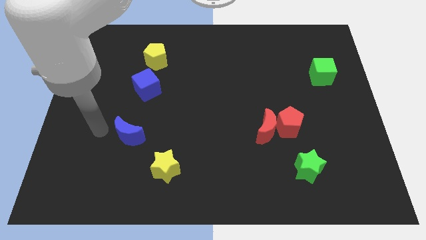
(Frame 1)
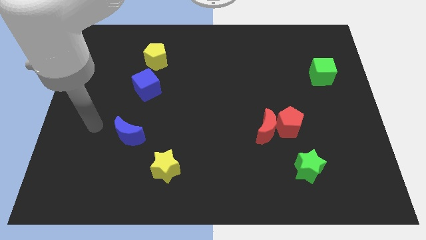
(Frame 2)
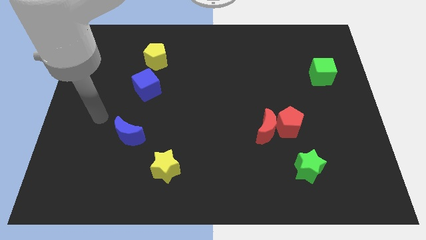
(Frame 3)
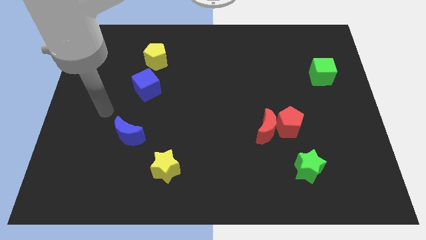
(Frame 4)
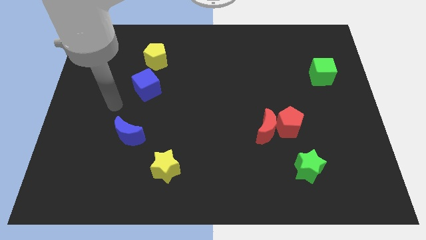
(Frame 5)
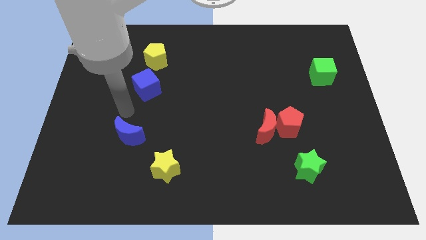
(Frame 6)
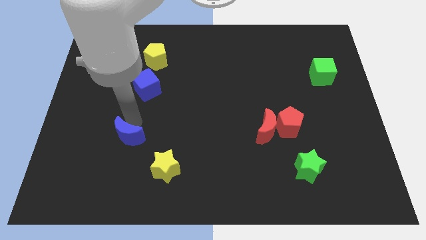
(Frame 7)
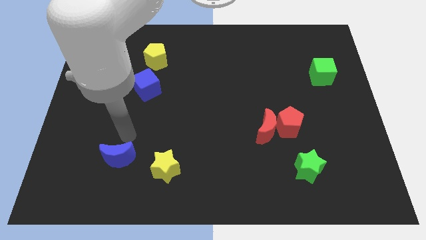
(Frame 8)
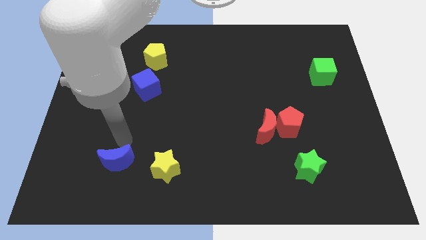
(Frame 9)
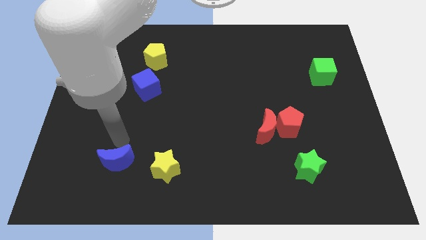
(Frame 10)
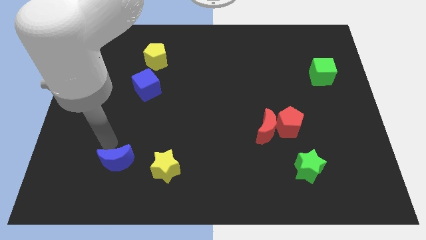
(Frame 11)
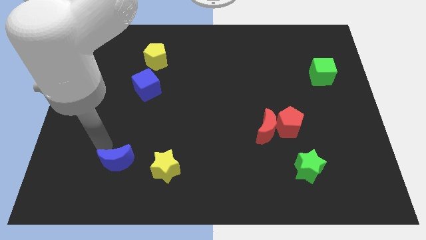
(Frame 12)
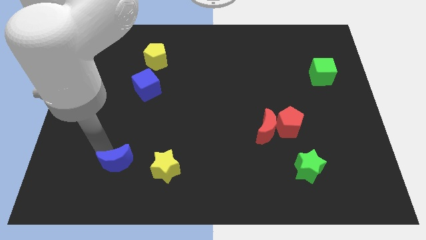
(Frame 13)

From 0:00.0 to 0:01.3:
place the blue moon left to the yellow star

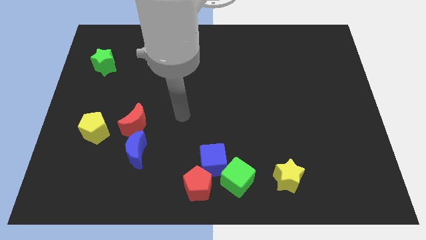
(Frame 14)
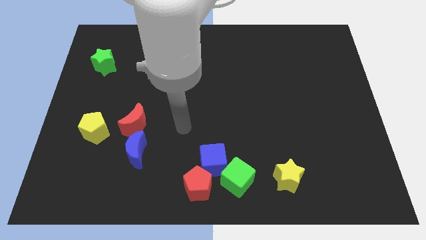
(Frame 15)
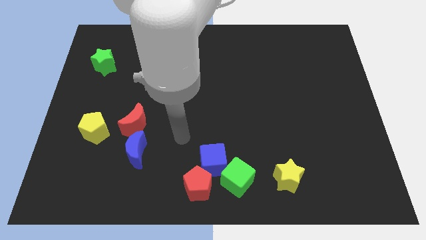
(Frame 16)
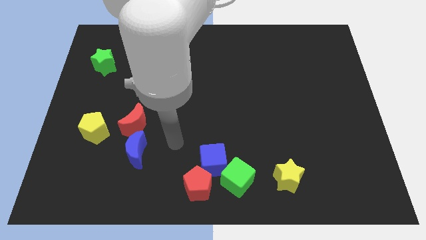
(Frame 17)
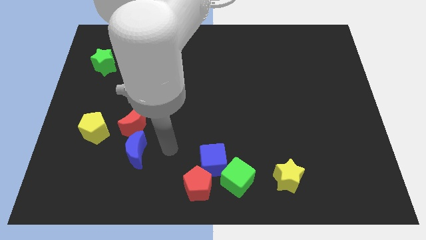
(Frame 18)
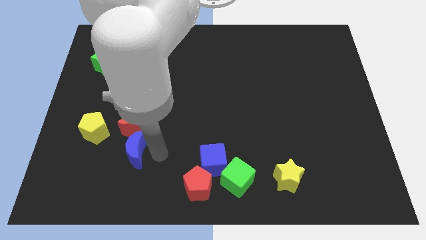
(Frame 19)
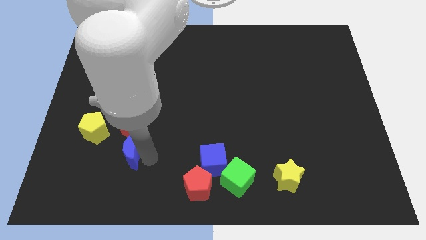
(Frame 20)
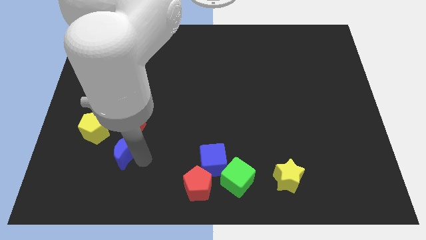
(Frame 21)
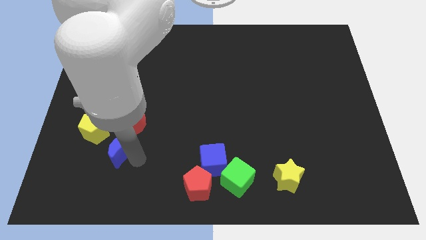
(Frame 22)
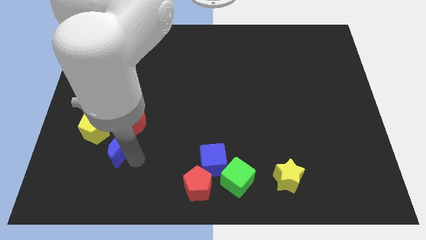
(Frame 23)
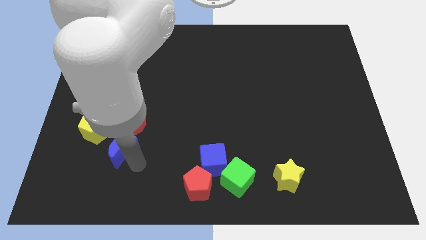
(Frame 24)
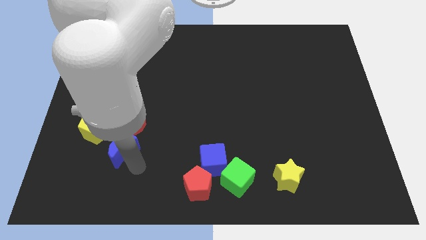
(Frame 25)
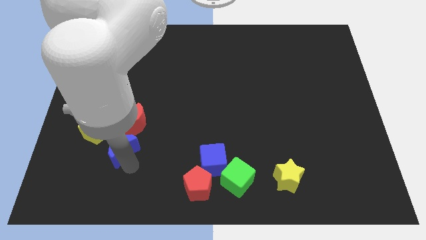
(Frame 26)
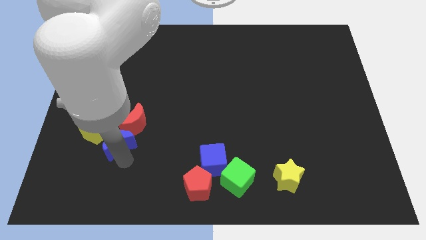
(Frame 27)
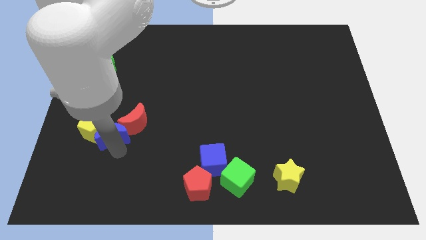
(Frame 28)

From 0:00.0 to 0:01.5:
move the blue moon towards the group of the blocks

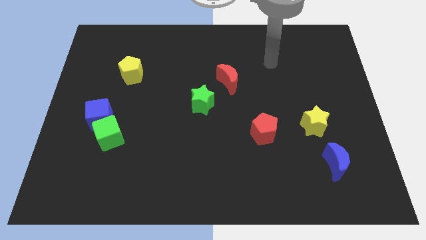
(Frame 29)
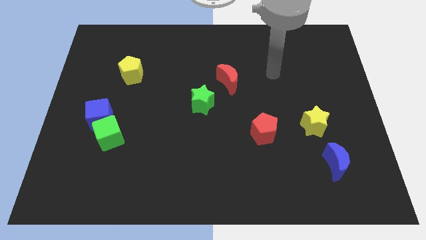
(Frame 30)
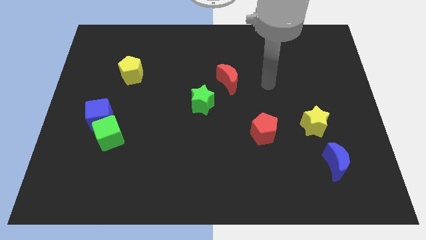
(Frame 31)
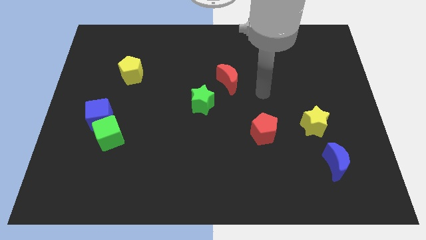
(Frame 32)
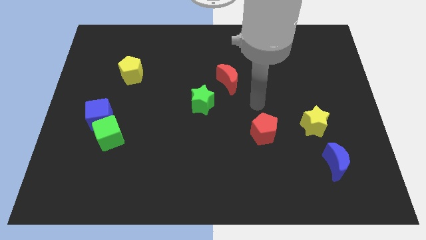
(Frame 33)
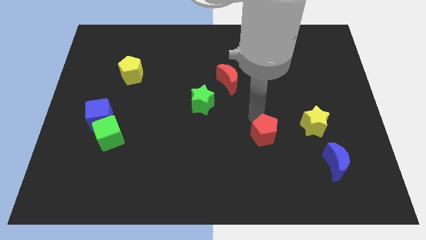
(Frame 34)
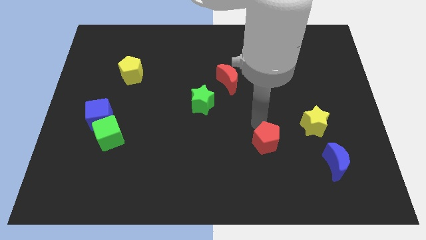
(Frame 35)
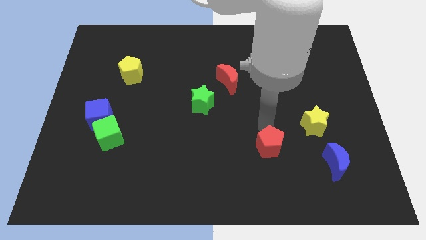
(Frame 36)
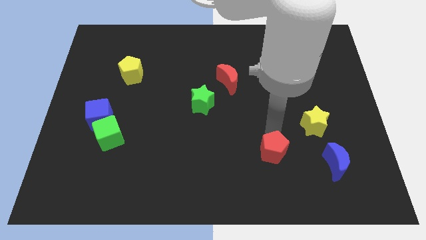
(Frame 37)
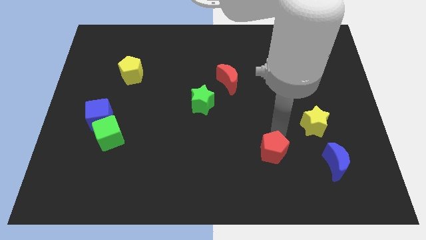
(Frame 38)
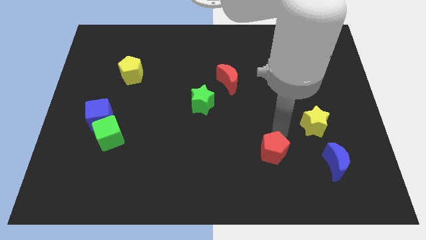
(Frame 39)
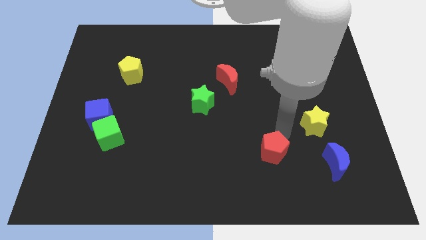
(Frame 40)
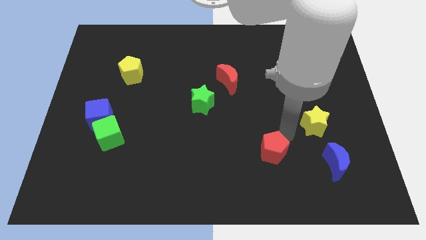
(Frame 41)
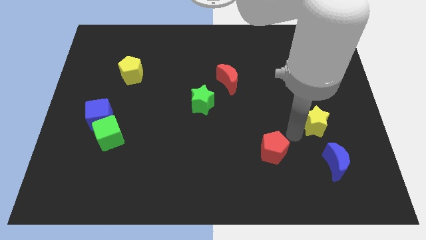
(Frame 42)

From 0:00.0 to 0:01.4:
move the red pentagon slightly to the bottom

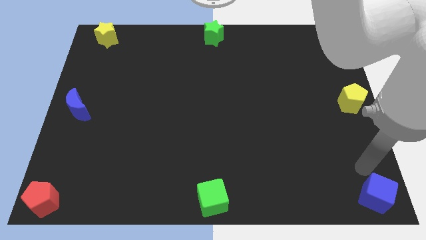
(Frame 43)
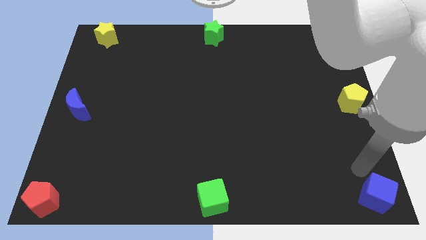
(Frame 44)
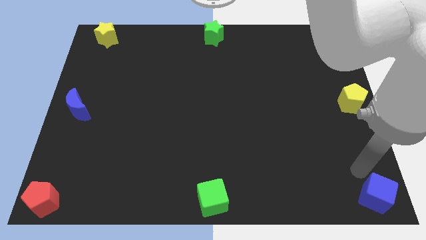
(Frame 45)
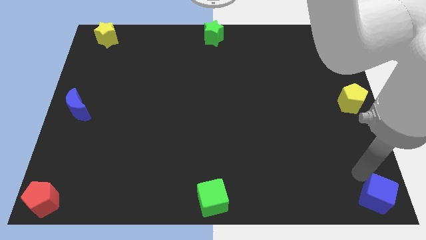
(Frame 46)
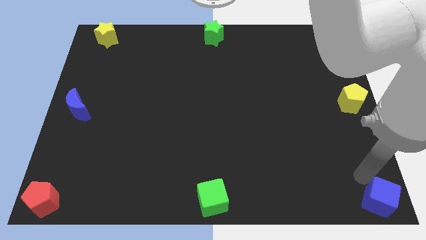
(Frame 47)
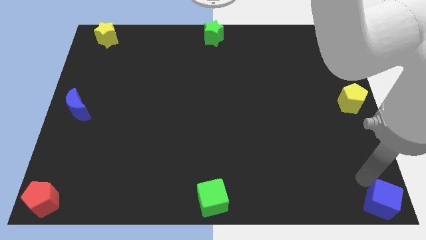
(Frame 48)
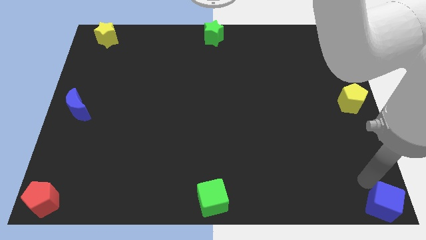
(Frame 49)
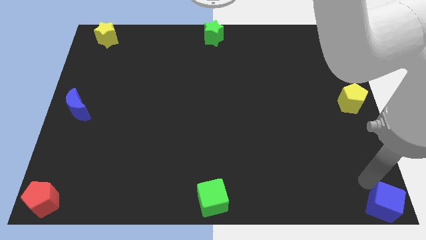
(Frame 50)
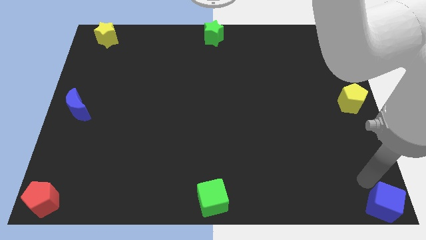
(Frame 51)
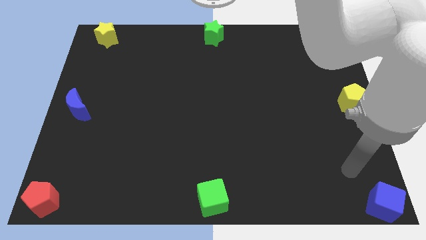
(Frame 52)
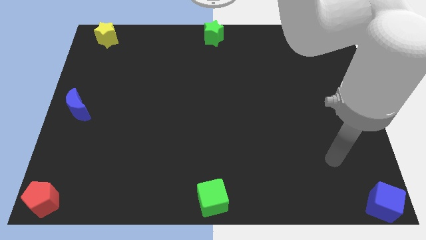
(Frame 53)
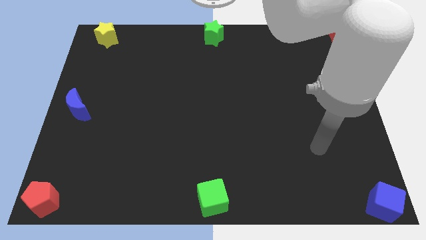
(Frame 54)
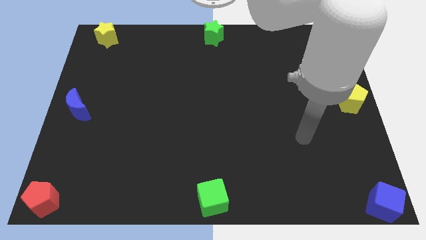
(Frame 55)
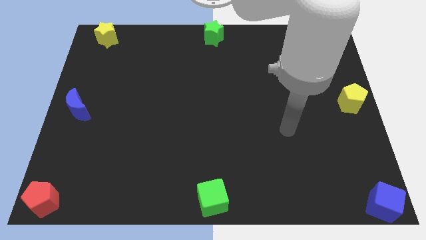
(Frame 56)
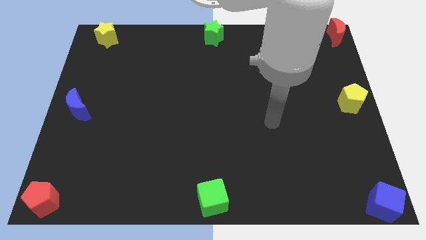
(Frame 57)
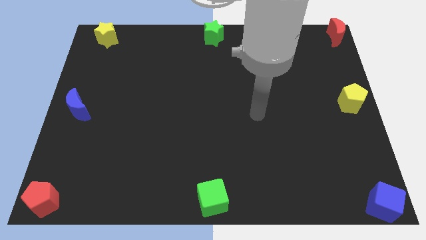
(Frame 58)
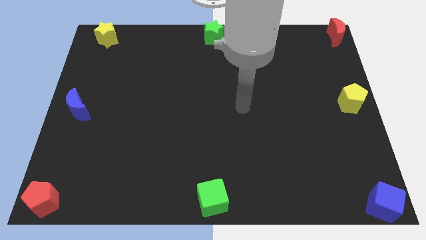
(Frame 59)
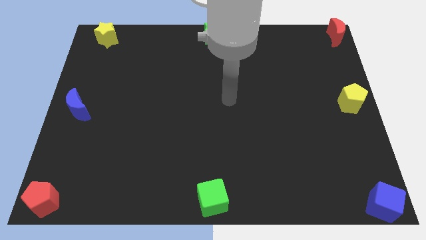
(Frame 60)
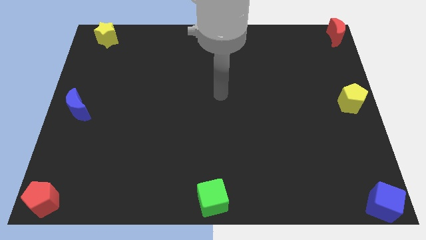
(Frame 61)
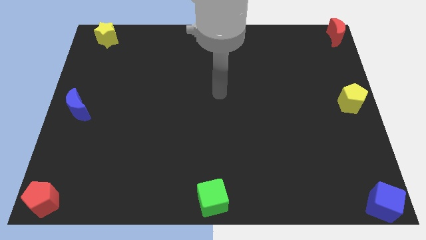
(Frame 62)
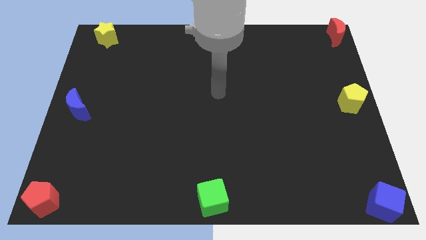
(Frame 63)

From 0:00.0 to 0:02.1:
place the blue cube to the bottom right corner of the board

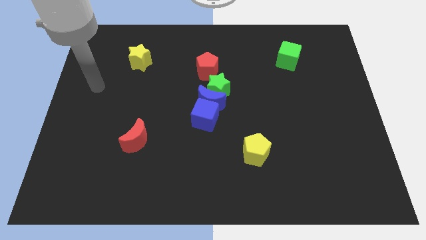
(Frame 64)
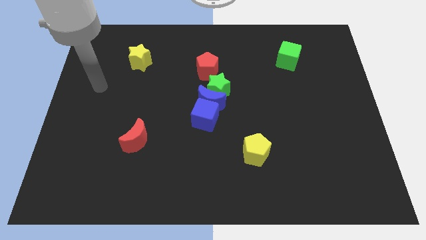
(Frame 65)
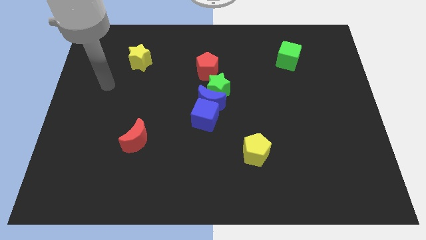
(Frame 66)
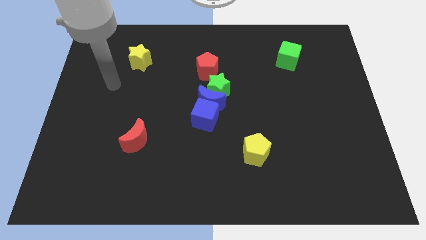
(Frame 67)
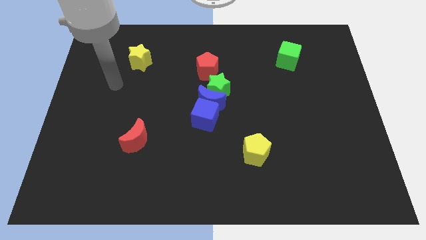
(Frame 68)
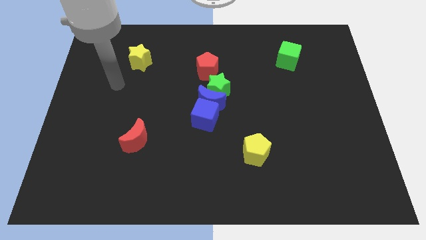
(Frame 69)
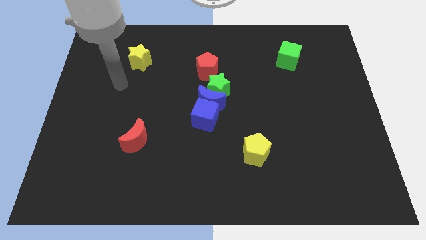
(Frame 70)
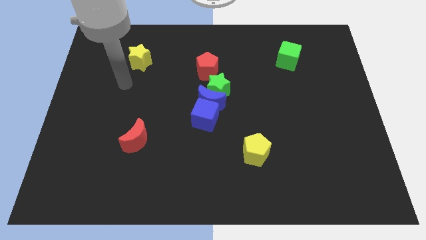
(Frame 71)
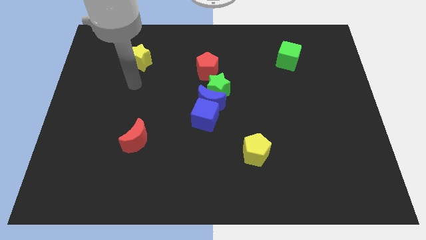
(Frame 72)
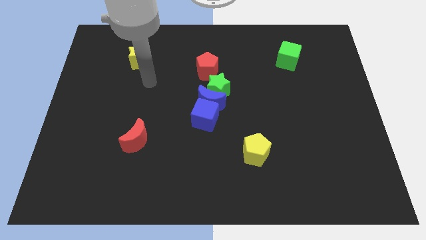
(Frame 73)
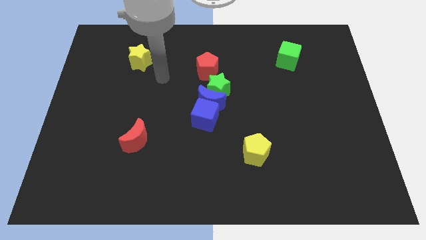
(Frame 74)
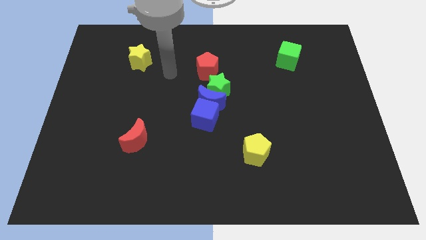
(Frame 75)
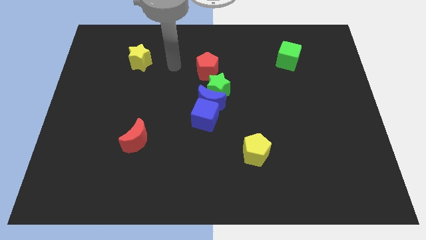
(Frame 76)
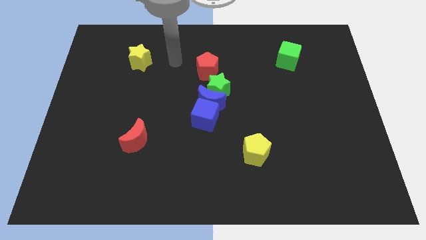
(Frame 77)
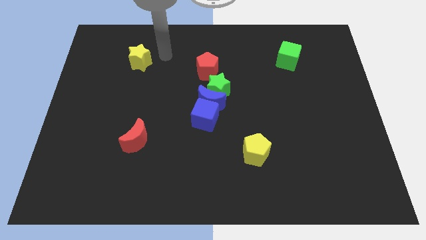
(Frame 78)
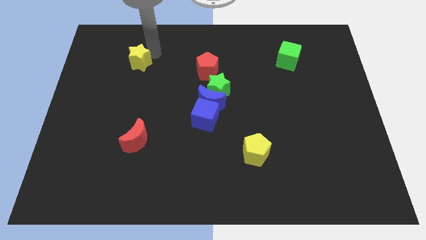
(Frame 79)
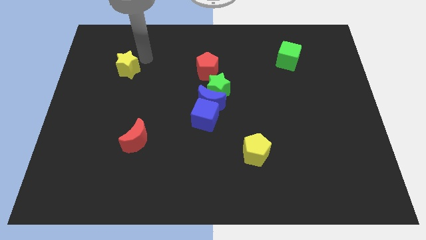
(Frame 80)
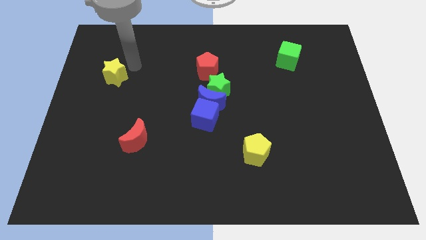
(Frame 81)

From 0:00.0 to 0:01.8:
slide the yellow star diagonal to the left of the red pentagon

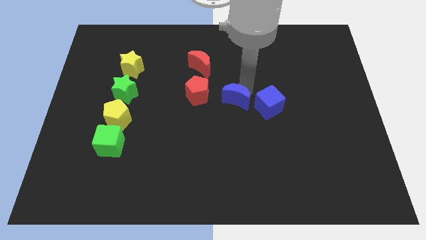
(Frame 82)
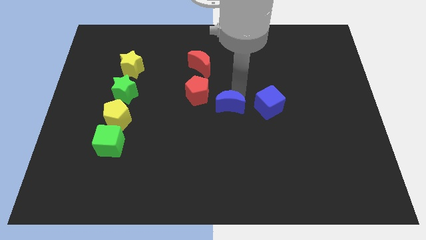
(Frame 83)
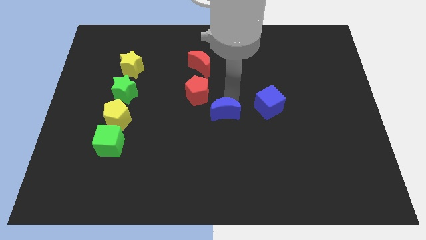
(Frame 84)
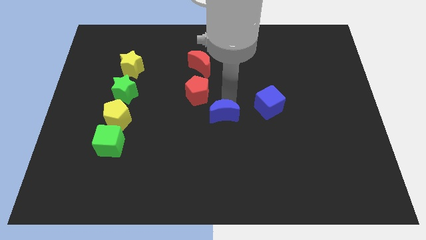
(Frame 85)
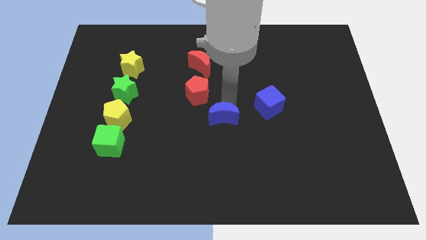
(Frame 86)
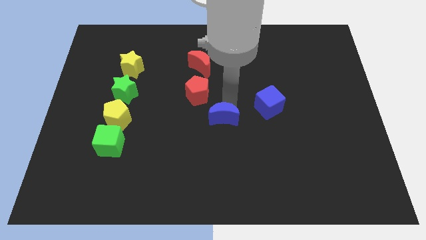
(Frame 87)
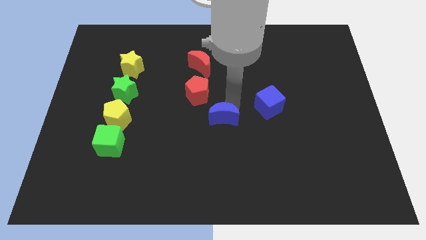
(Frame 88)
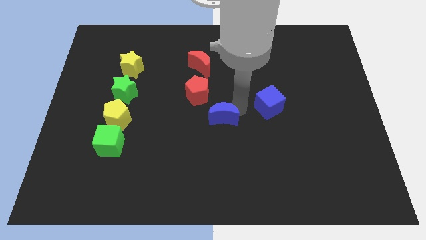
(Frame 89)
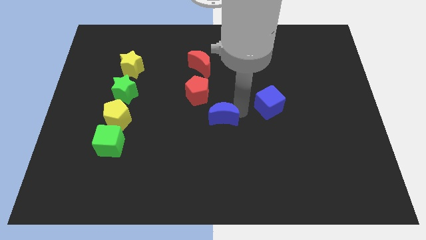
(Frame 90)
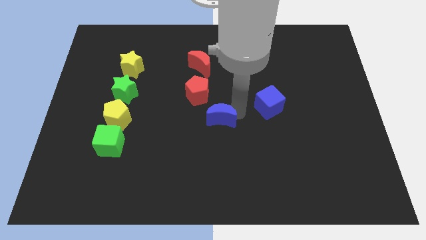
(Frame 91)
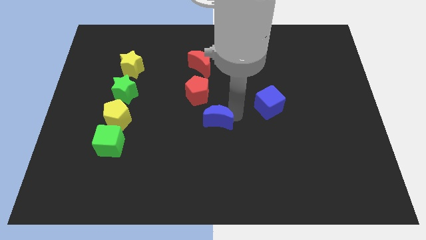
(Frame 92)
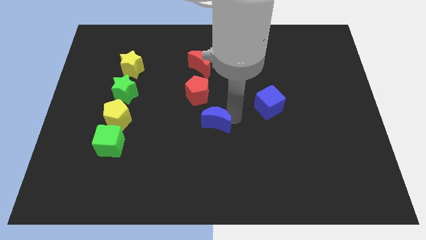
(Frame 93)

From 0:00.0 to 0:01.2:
push the blue crescent to the center of the board
